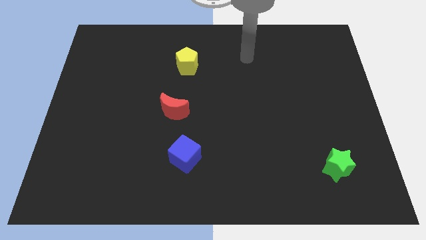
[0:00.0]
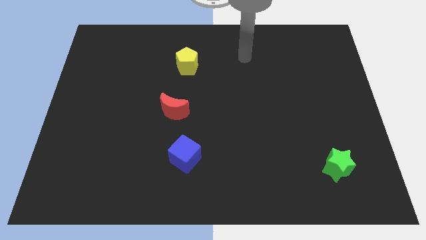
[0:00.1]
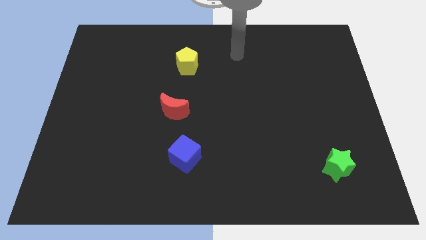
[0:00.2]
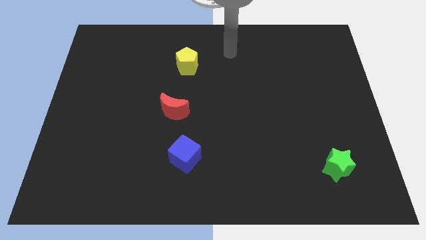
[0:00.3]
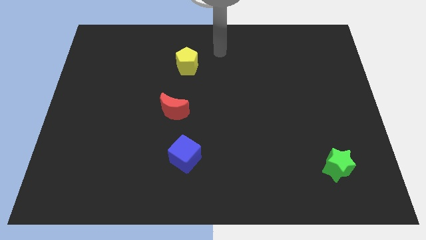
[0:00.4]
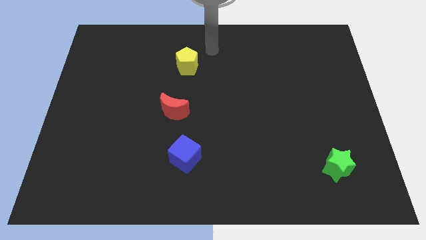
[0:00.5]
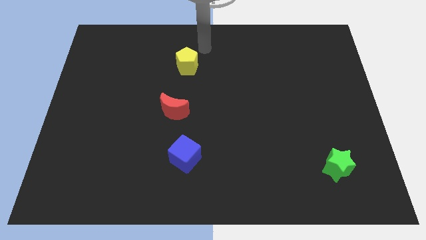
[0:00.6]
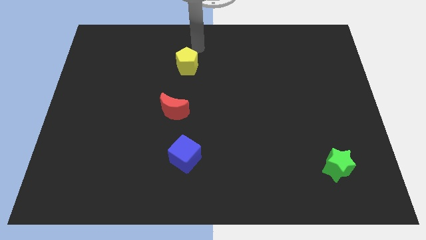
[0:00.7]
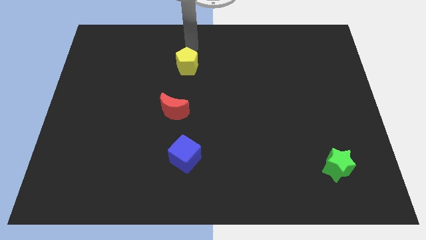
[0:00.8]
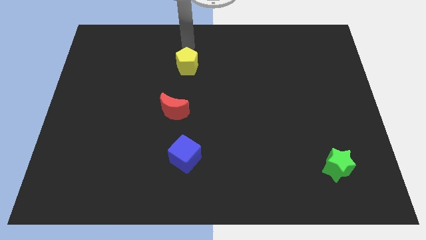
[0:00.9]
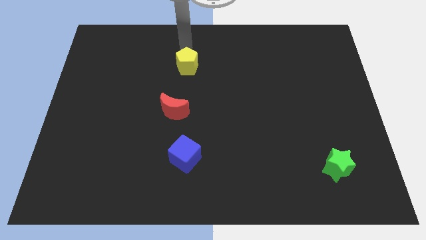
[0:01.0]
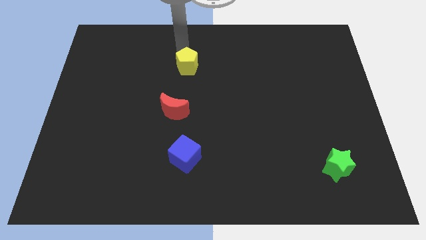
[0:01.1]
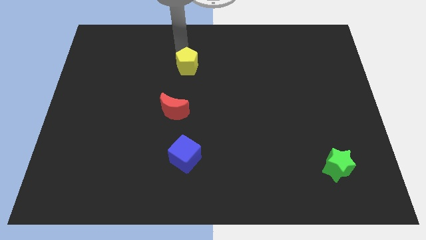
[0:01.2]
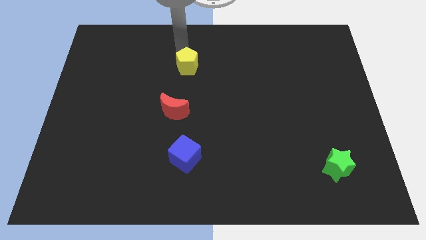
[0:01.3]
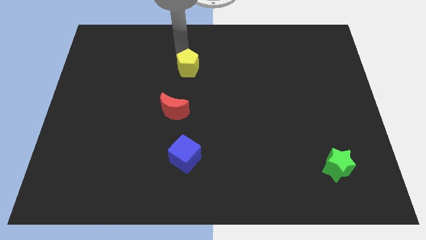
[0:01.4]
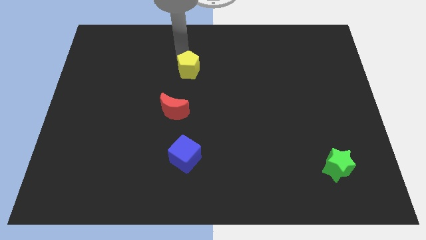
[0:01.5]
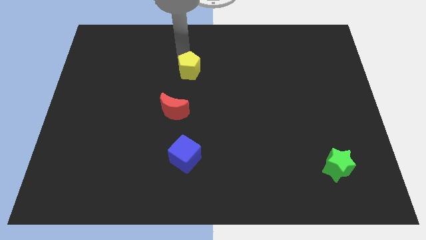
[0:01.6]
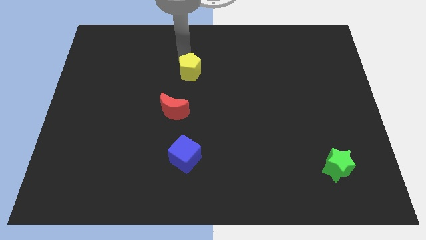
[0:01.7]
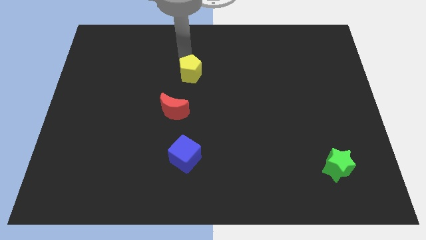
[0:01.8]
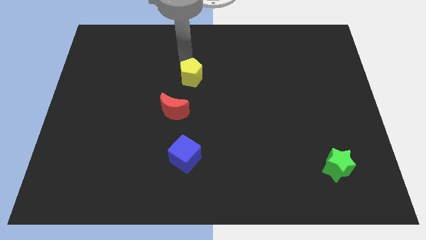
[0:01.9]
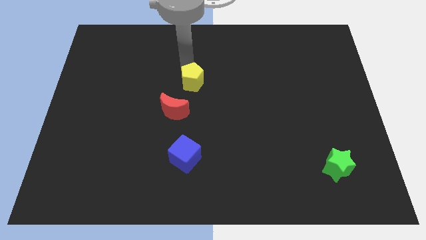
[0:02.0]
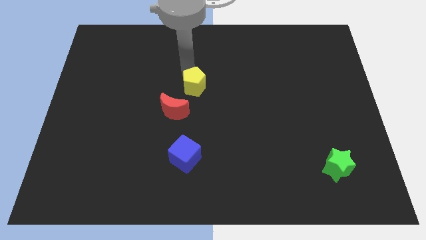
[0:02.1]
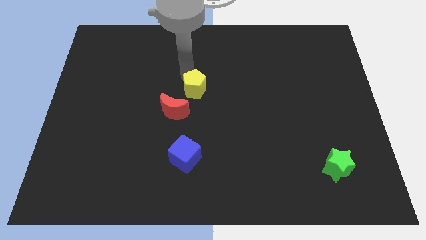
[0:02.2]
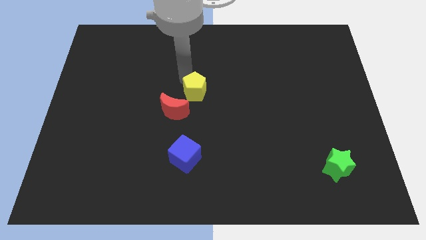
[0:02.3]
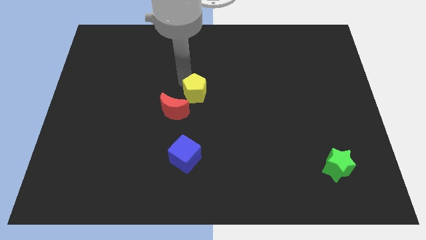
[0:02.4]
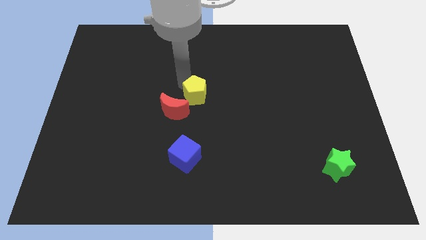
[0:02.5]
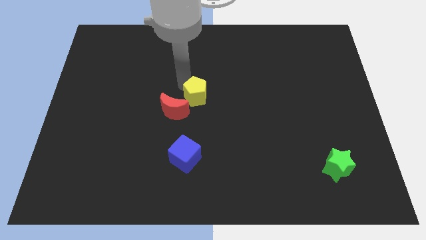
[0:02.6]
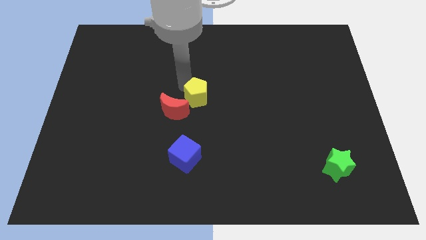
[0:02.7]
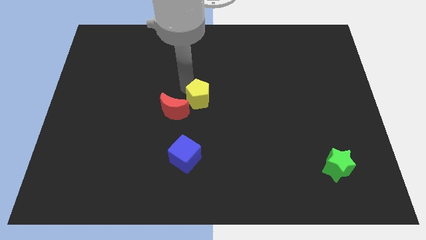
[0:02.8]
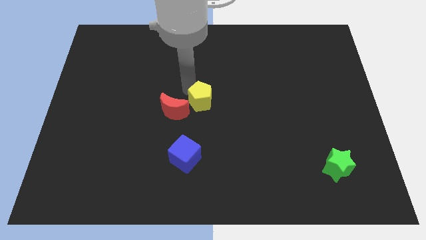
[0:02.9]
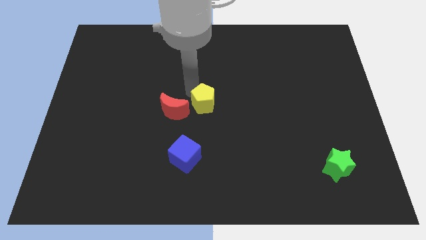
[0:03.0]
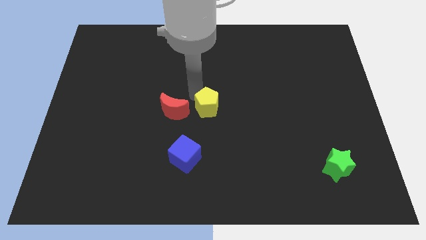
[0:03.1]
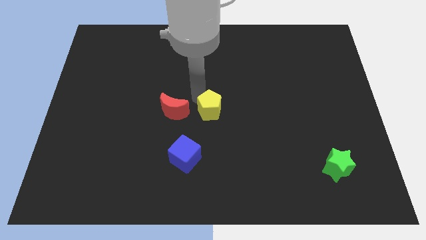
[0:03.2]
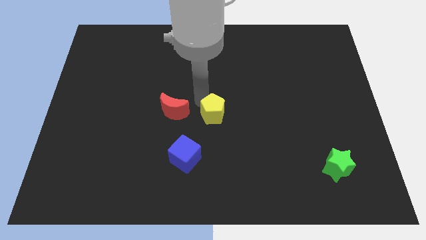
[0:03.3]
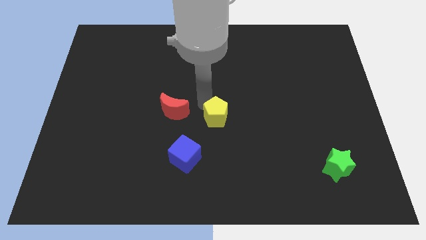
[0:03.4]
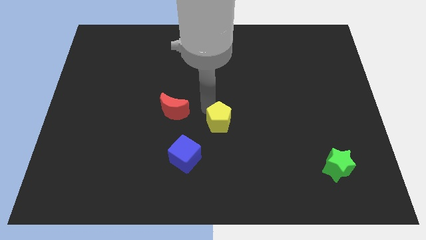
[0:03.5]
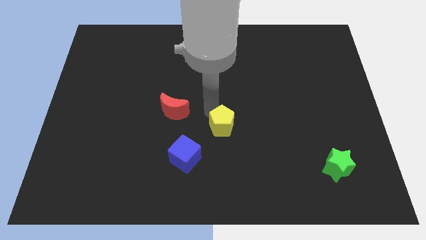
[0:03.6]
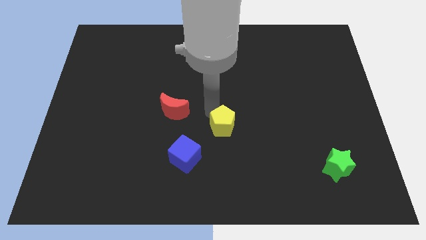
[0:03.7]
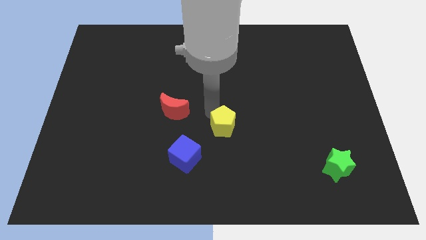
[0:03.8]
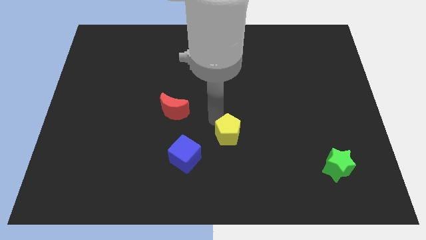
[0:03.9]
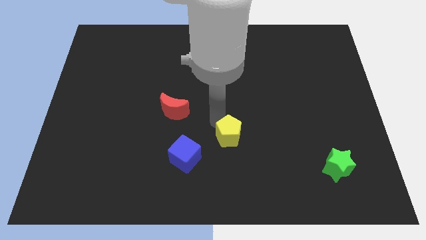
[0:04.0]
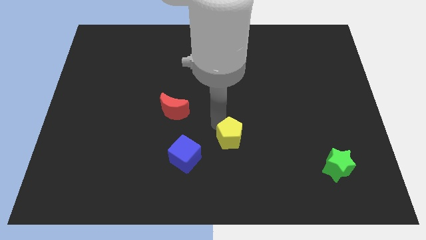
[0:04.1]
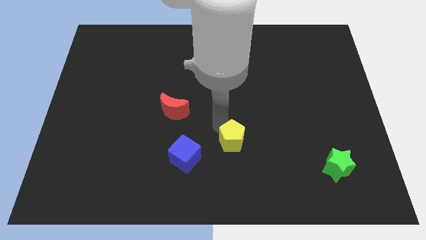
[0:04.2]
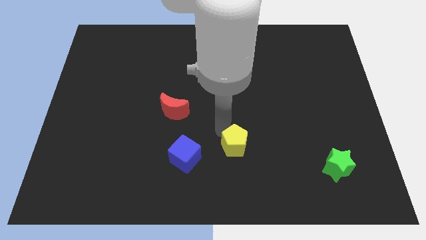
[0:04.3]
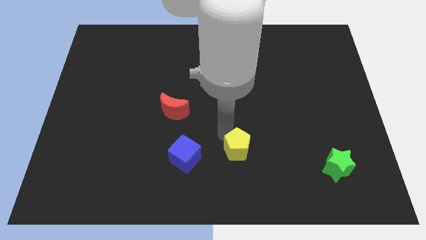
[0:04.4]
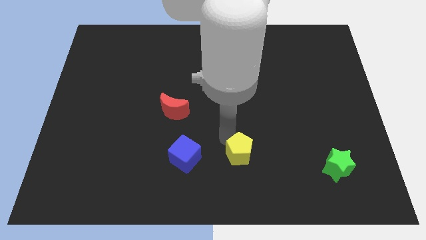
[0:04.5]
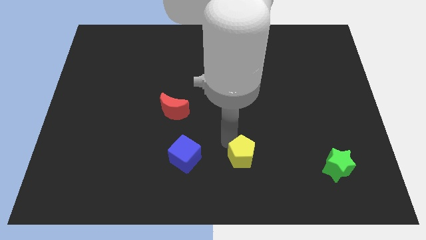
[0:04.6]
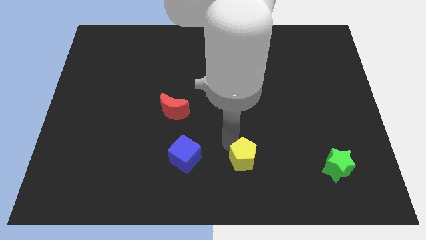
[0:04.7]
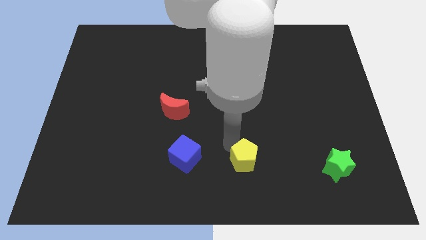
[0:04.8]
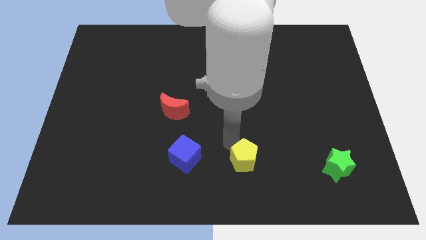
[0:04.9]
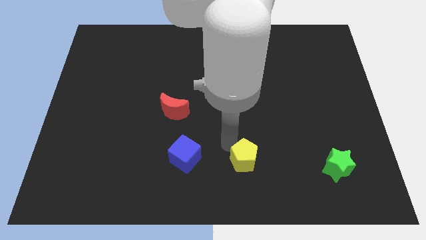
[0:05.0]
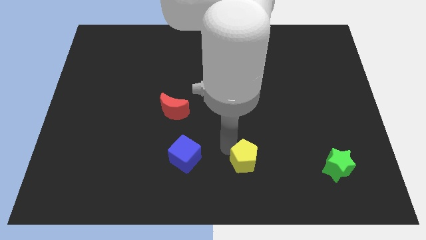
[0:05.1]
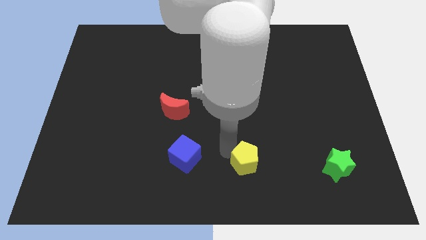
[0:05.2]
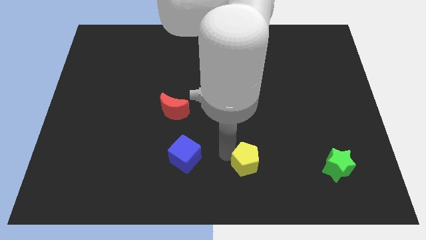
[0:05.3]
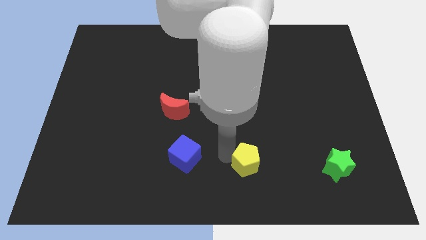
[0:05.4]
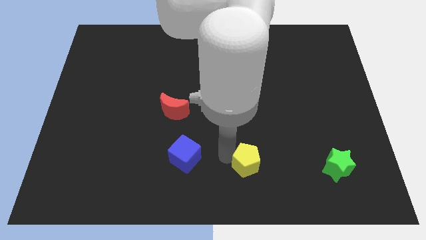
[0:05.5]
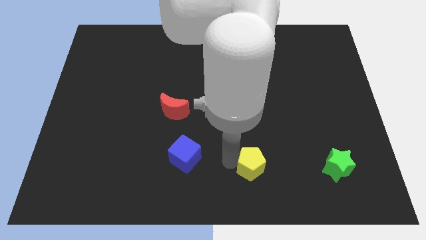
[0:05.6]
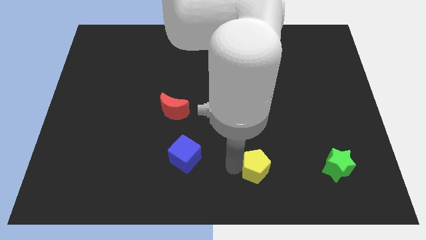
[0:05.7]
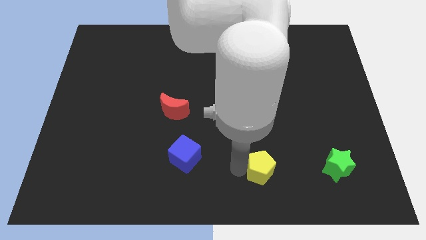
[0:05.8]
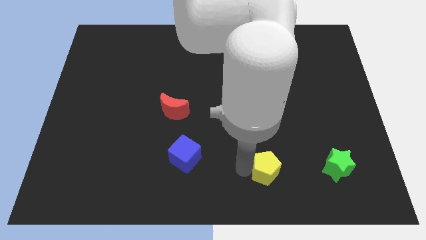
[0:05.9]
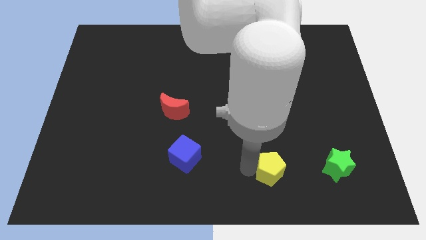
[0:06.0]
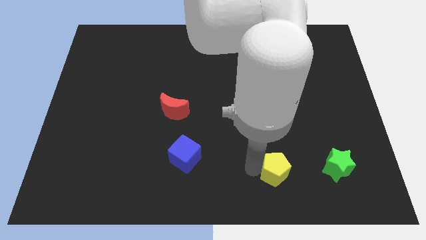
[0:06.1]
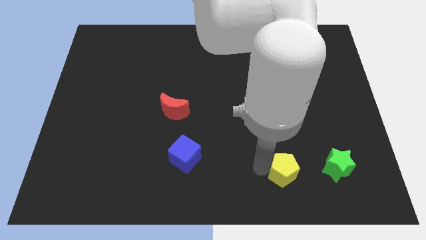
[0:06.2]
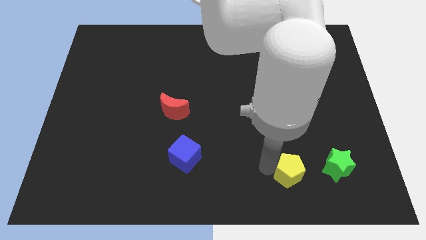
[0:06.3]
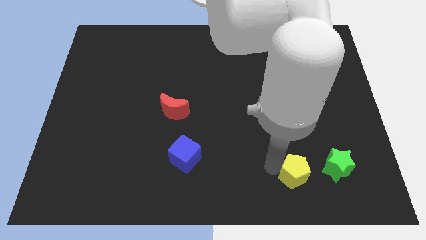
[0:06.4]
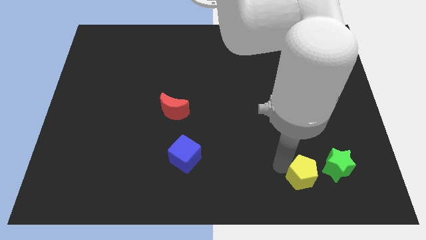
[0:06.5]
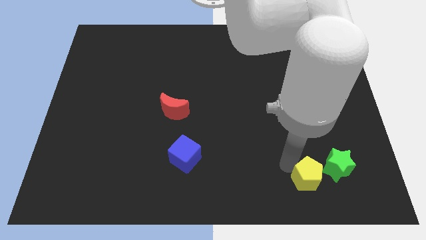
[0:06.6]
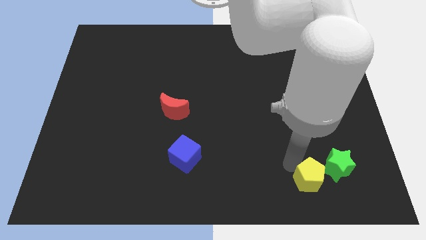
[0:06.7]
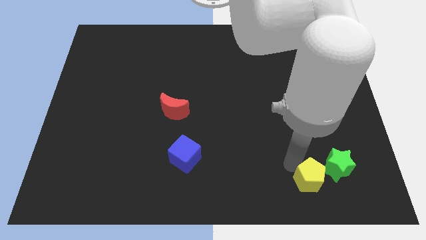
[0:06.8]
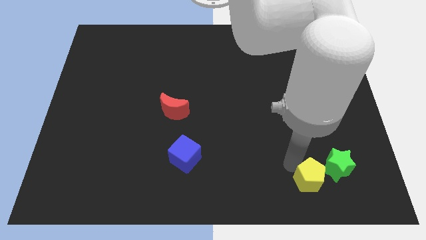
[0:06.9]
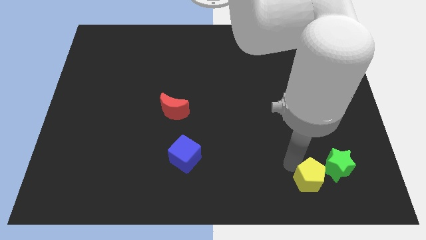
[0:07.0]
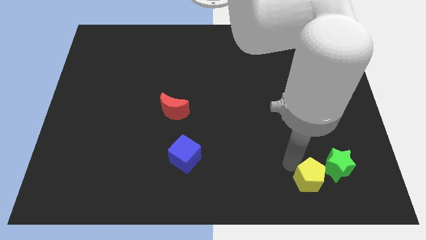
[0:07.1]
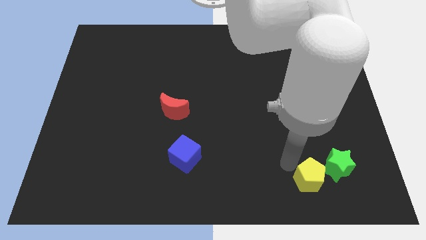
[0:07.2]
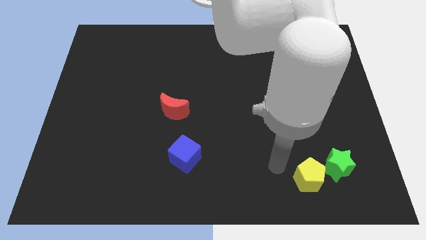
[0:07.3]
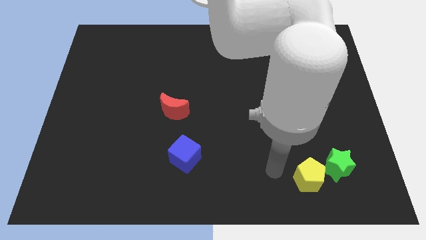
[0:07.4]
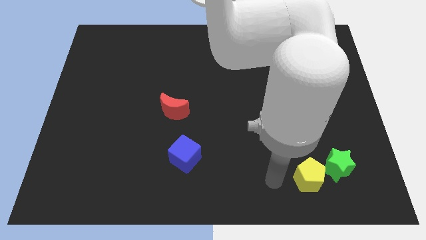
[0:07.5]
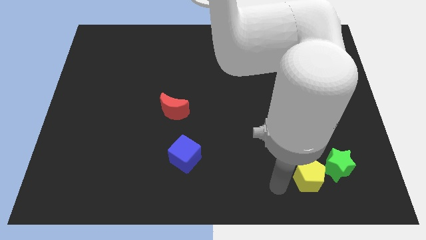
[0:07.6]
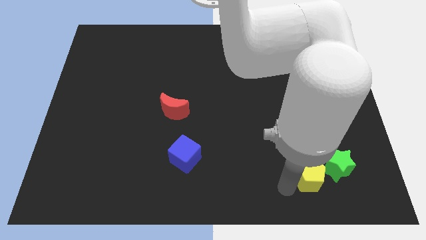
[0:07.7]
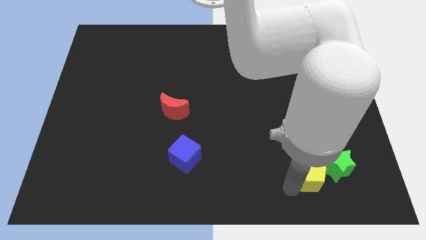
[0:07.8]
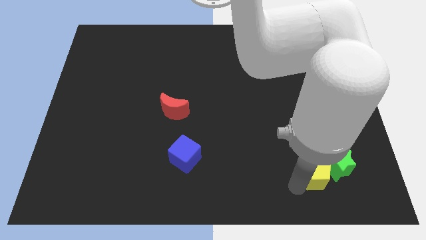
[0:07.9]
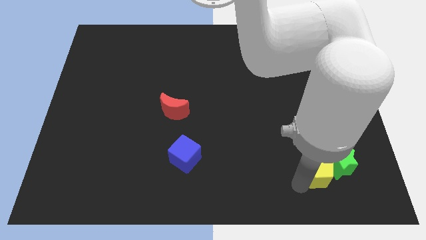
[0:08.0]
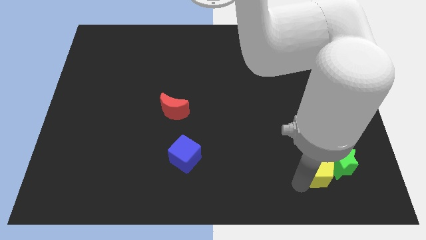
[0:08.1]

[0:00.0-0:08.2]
slide the pentagon towards the green star
